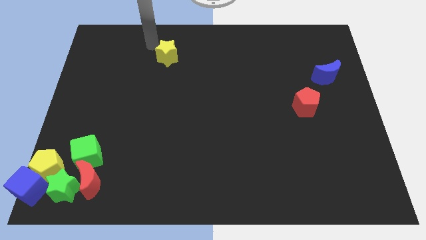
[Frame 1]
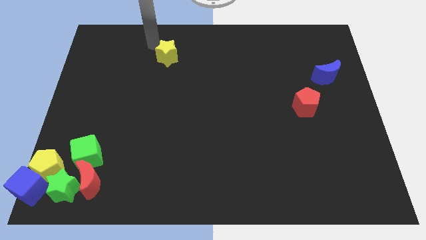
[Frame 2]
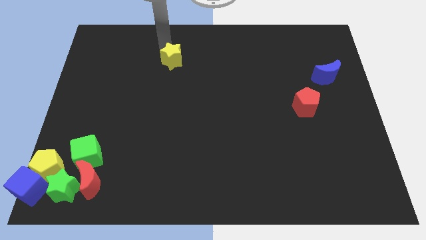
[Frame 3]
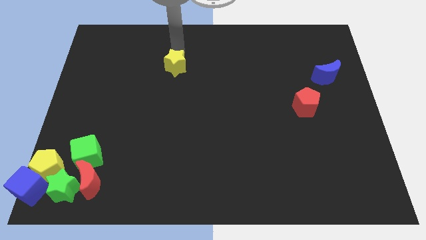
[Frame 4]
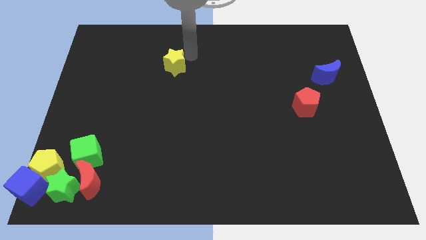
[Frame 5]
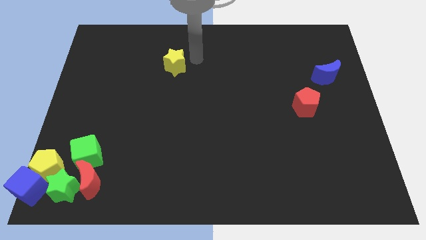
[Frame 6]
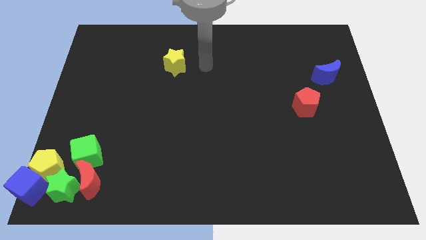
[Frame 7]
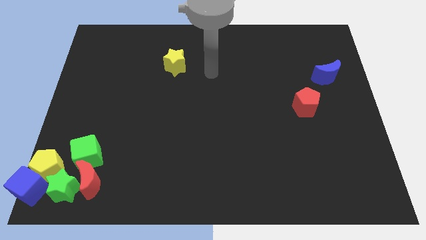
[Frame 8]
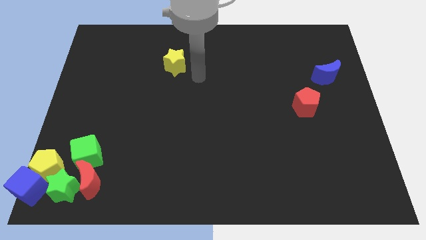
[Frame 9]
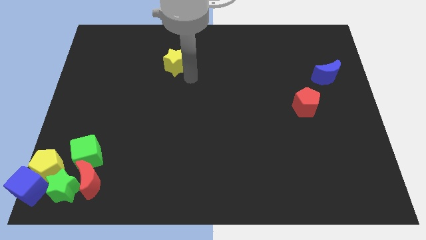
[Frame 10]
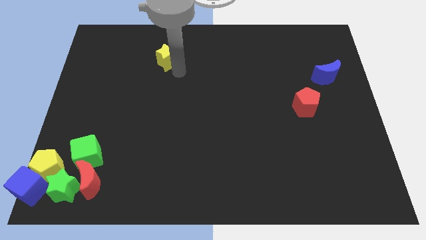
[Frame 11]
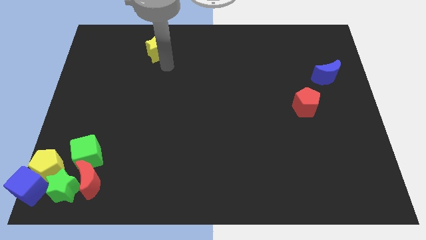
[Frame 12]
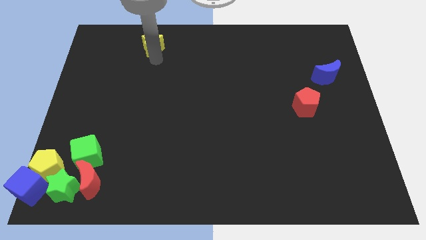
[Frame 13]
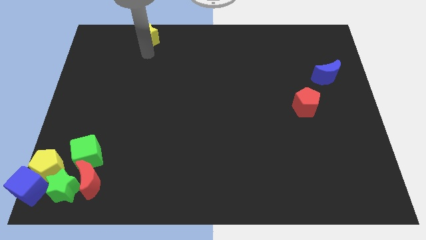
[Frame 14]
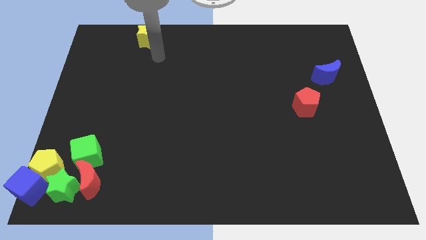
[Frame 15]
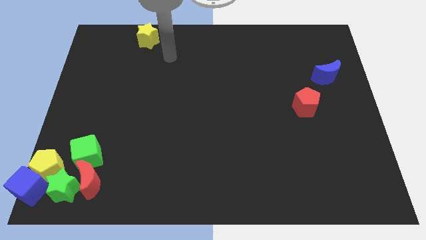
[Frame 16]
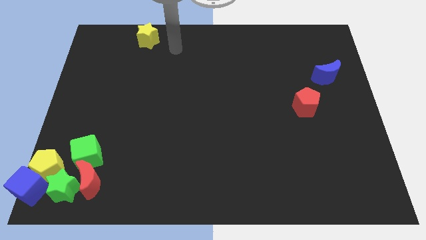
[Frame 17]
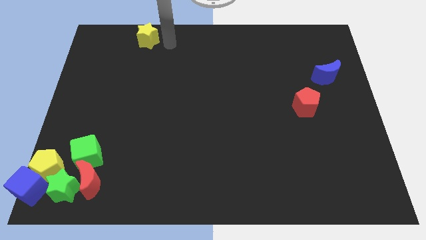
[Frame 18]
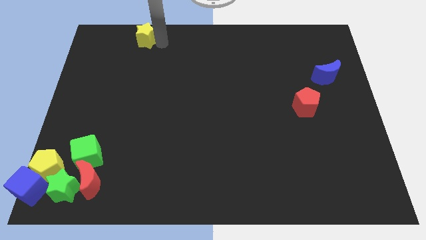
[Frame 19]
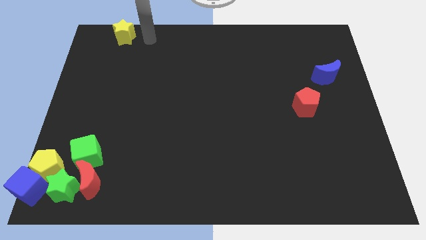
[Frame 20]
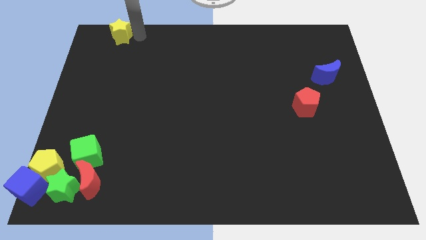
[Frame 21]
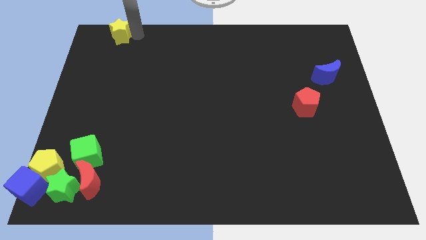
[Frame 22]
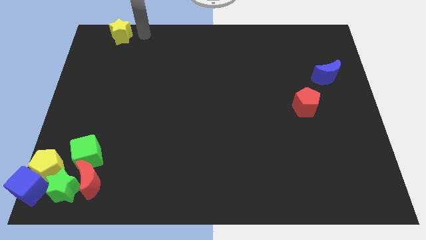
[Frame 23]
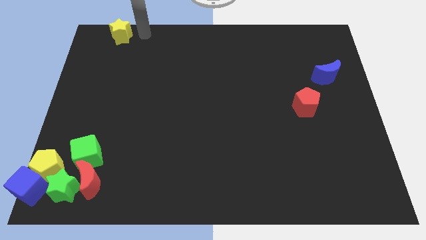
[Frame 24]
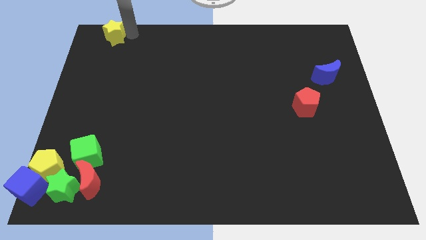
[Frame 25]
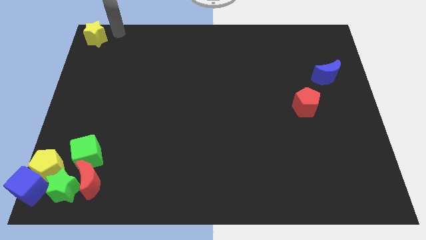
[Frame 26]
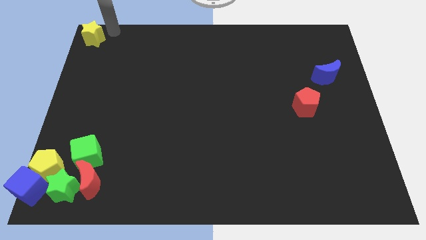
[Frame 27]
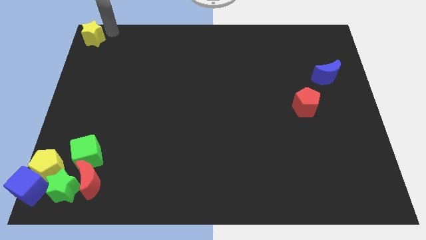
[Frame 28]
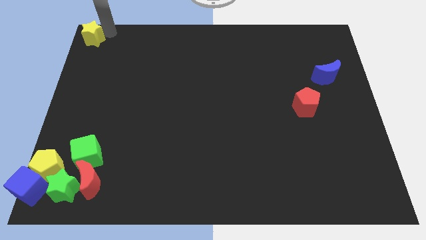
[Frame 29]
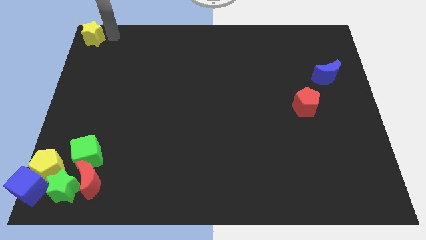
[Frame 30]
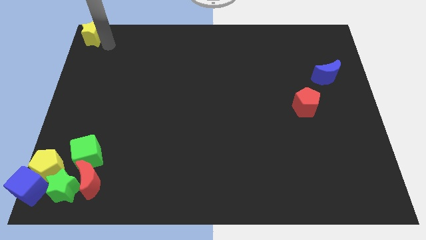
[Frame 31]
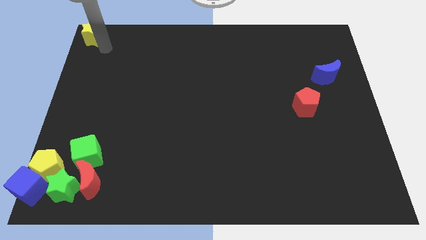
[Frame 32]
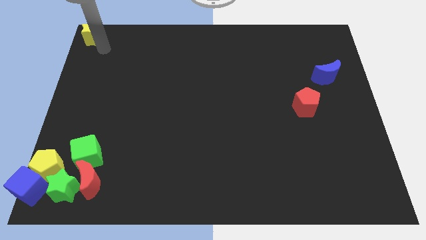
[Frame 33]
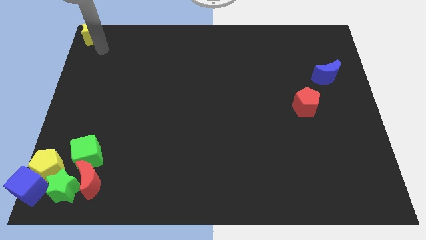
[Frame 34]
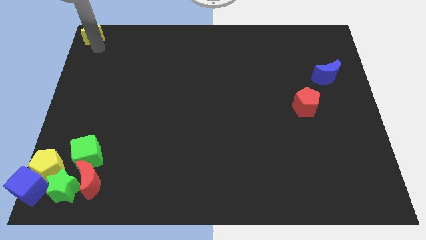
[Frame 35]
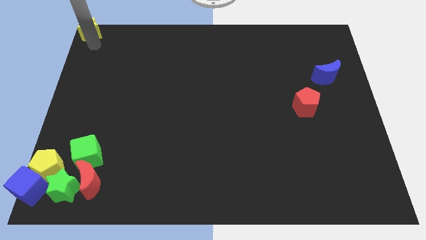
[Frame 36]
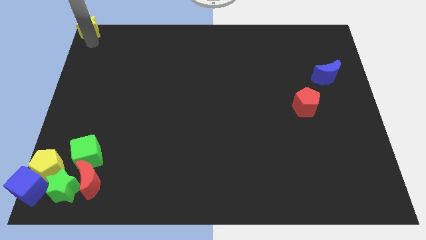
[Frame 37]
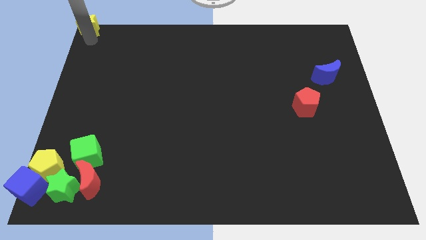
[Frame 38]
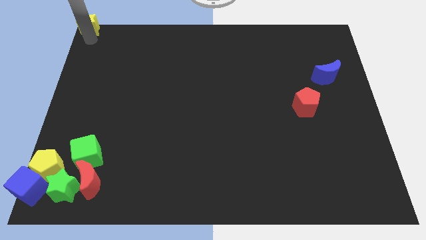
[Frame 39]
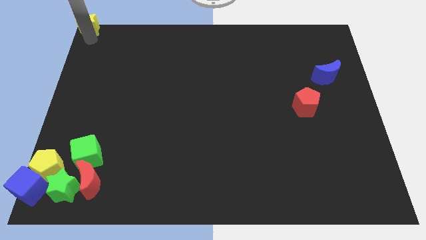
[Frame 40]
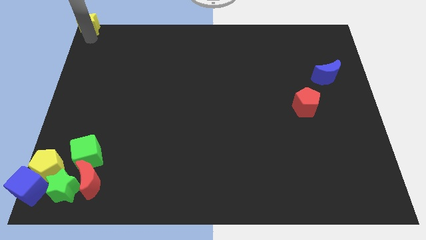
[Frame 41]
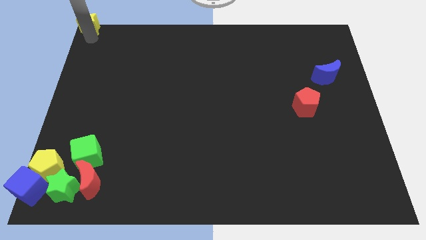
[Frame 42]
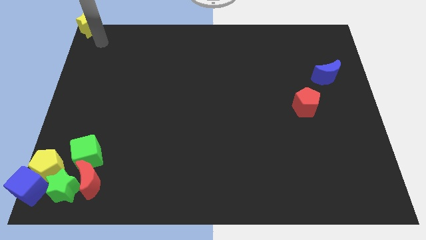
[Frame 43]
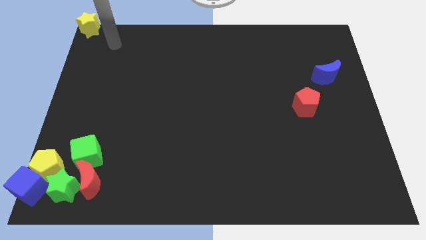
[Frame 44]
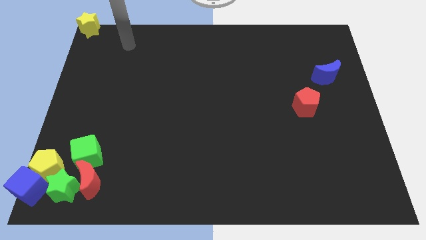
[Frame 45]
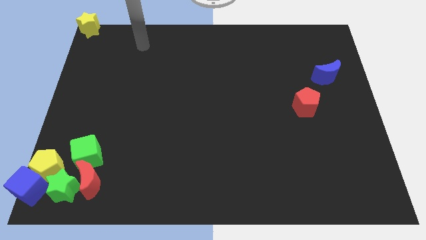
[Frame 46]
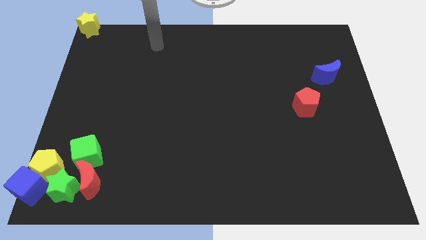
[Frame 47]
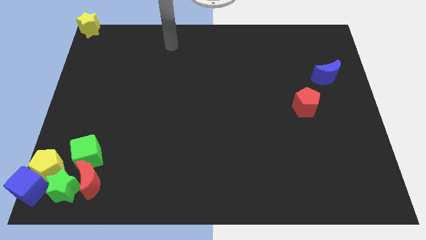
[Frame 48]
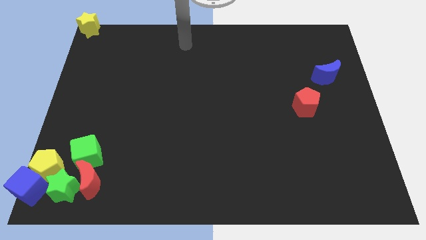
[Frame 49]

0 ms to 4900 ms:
place the yellow star towards the top left corner of the board

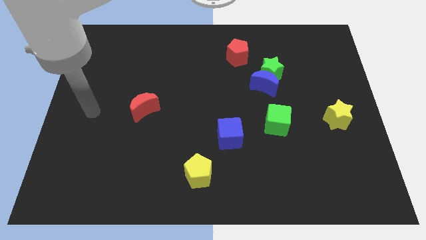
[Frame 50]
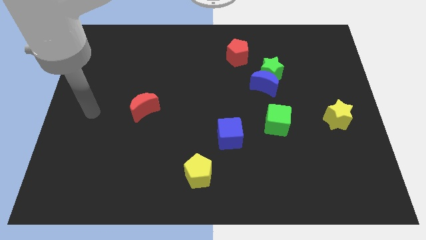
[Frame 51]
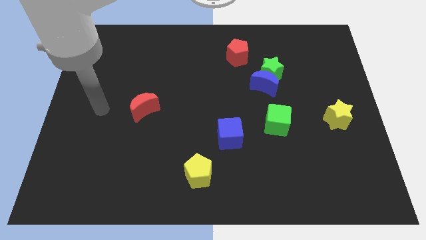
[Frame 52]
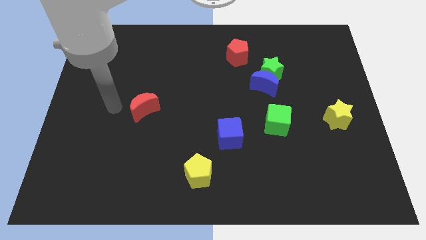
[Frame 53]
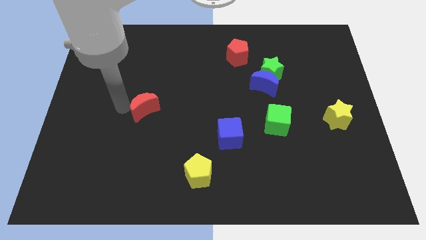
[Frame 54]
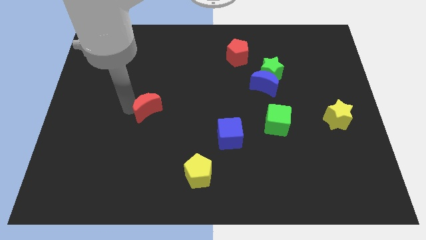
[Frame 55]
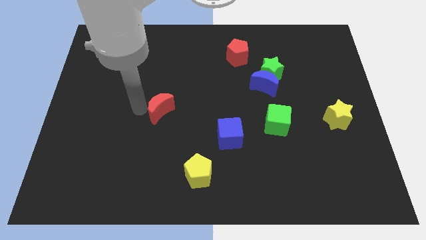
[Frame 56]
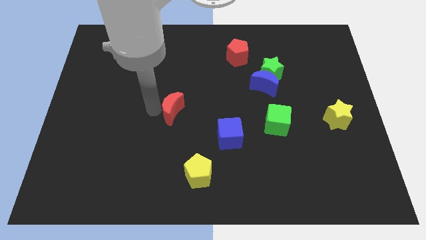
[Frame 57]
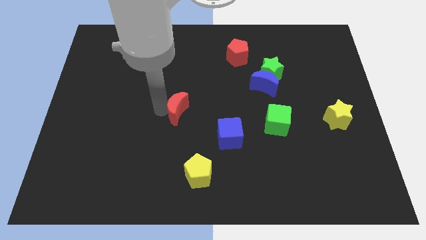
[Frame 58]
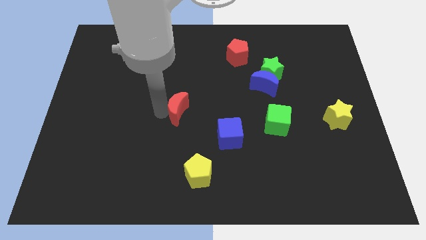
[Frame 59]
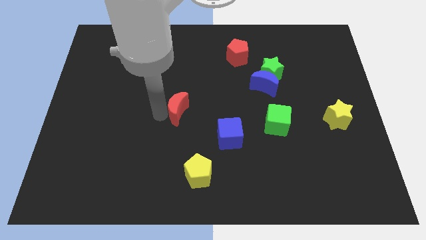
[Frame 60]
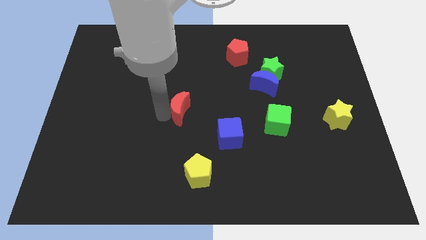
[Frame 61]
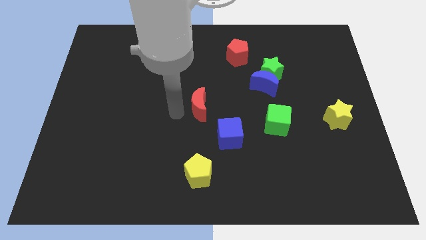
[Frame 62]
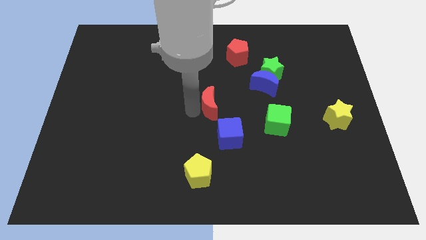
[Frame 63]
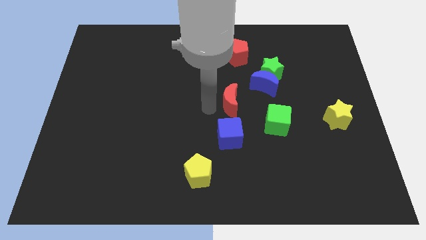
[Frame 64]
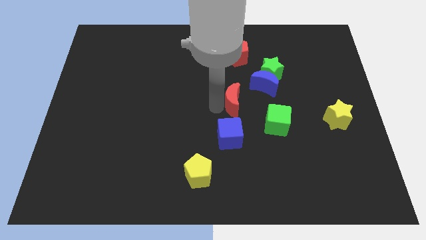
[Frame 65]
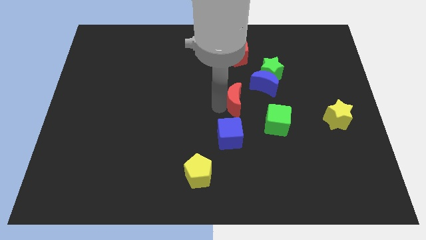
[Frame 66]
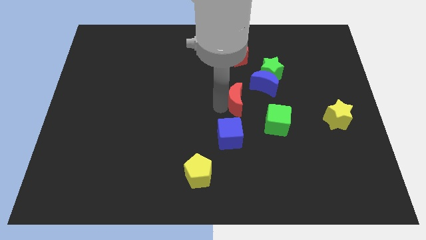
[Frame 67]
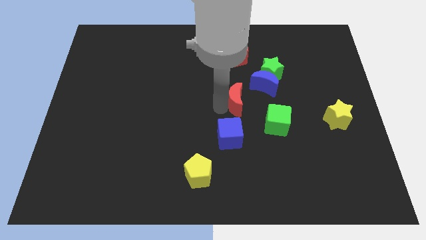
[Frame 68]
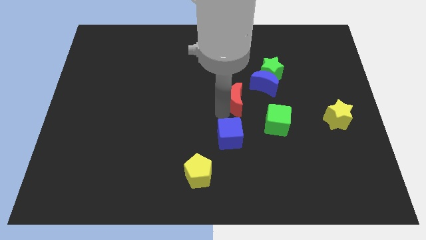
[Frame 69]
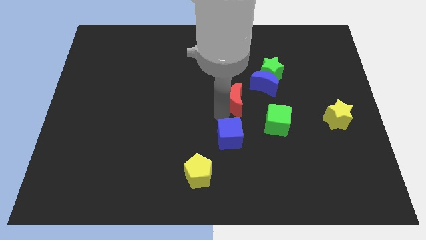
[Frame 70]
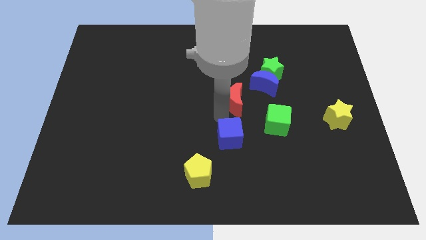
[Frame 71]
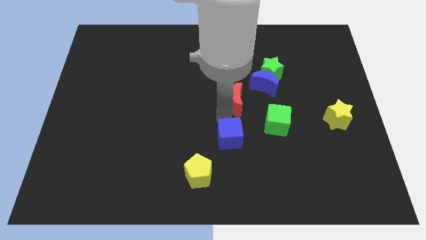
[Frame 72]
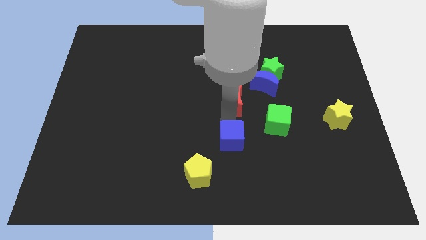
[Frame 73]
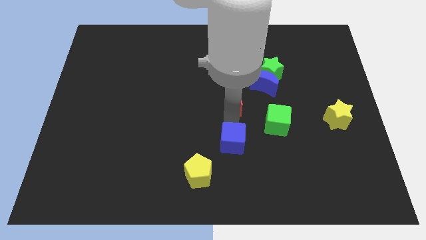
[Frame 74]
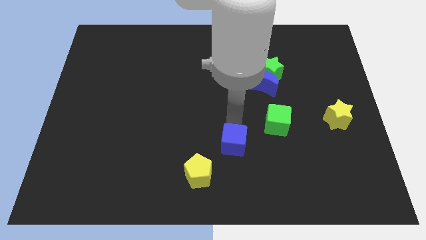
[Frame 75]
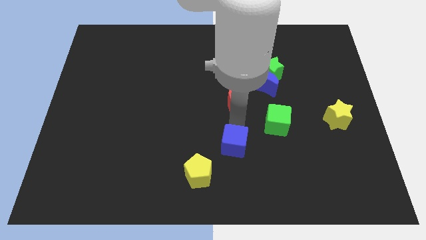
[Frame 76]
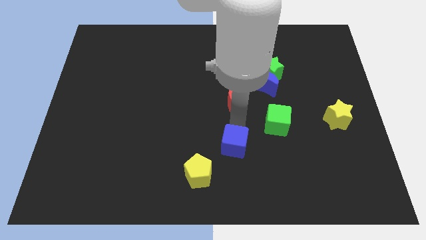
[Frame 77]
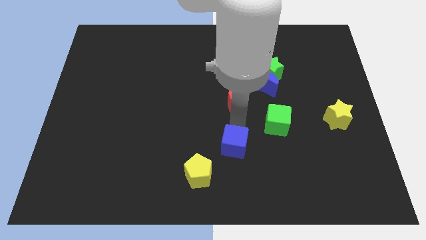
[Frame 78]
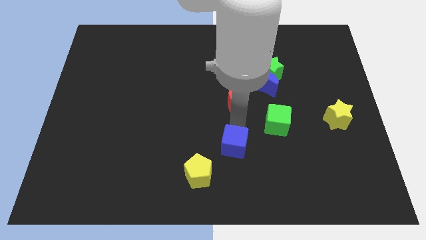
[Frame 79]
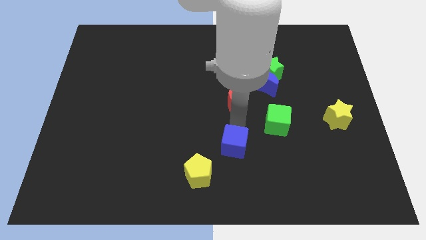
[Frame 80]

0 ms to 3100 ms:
push the red crescent towards the center

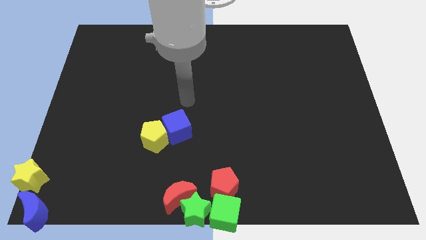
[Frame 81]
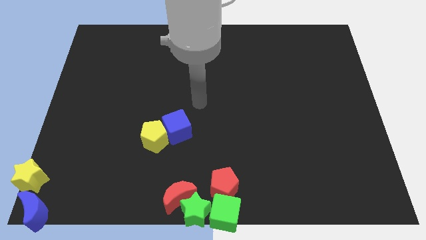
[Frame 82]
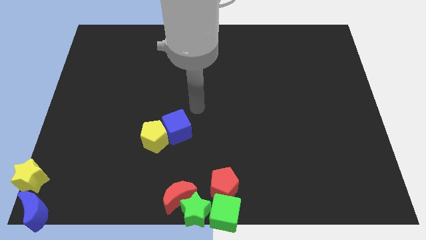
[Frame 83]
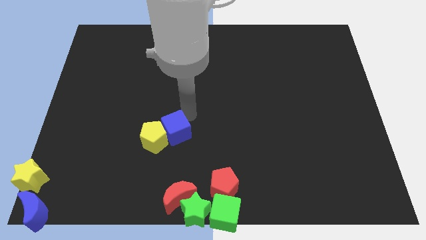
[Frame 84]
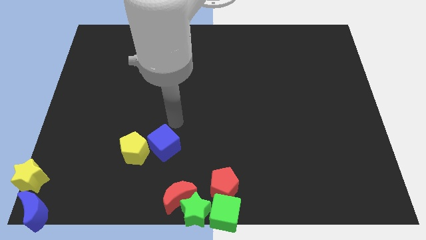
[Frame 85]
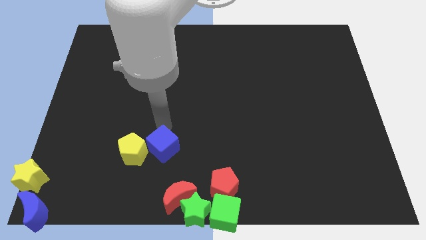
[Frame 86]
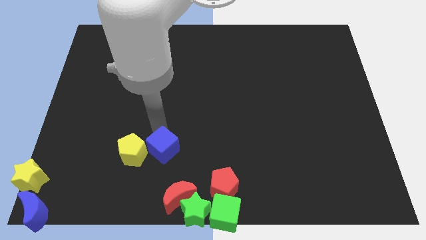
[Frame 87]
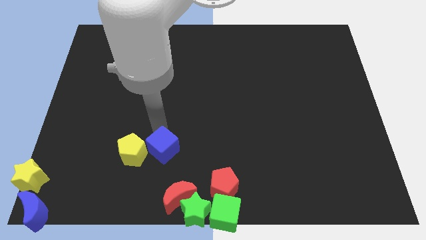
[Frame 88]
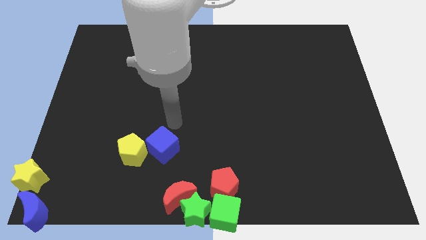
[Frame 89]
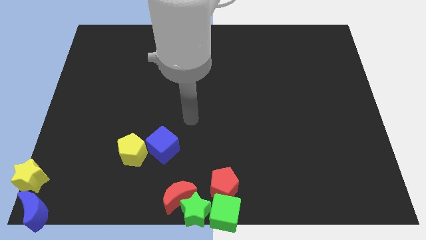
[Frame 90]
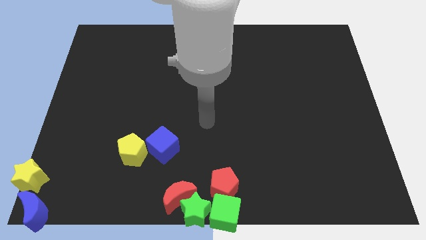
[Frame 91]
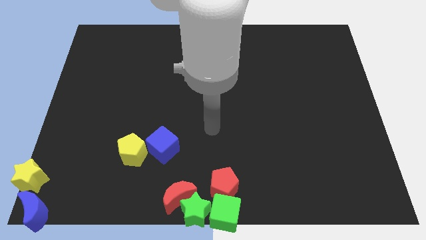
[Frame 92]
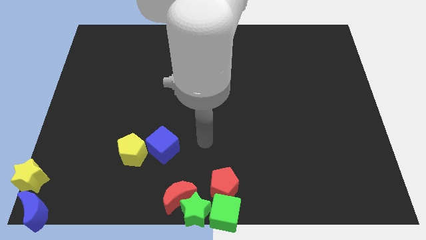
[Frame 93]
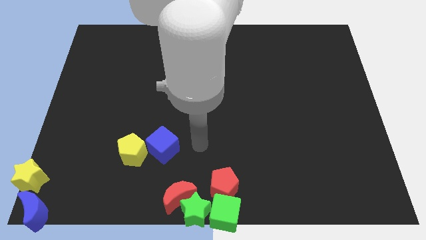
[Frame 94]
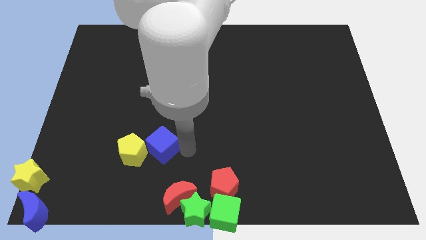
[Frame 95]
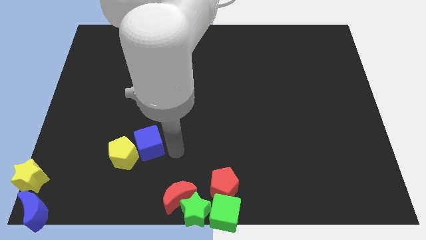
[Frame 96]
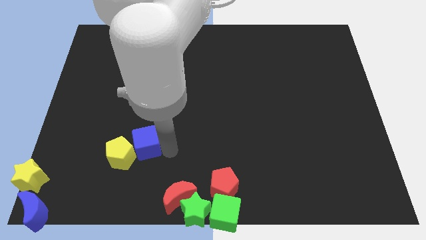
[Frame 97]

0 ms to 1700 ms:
push the blue cube diagonal to the red moon
